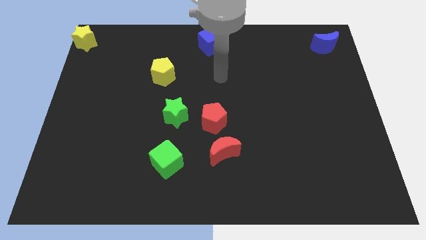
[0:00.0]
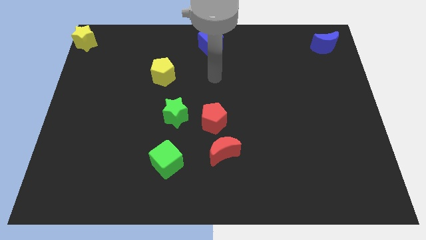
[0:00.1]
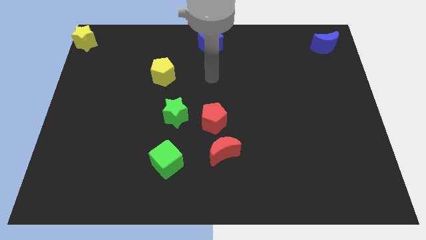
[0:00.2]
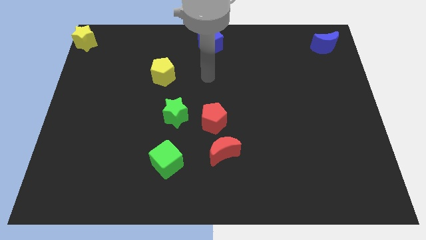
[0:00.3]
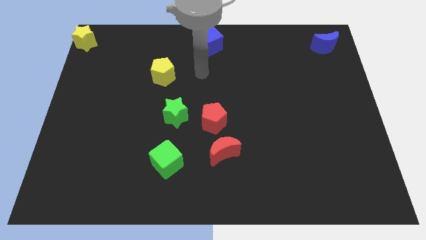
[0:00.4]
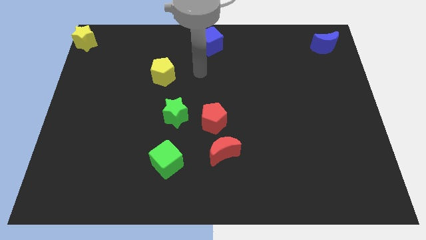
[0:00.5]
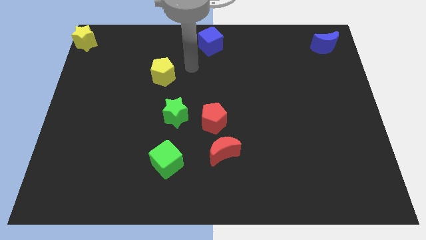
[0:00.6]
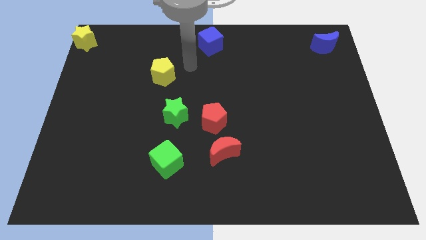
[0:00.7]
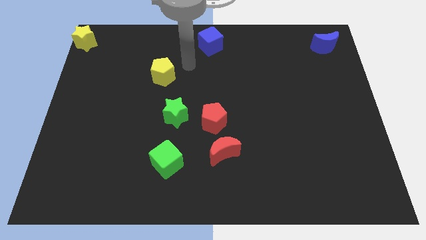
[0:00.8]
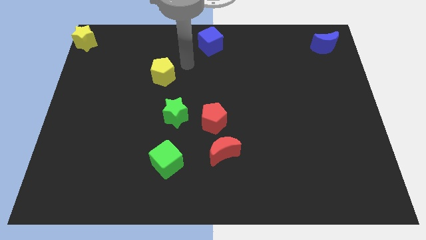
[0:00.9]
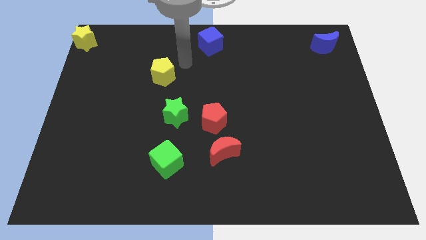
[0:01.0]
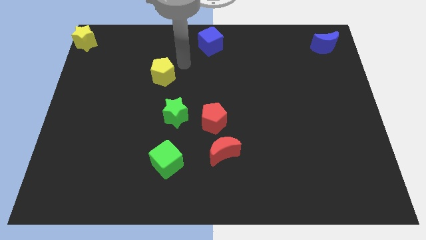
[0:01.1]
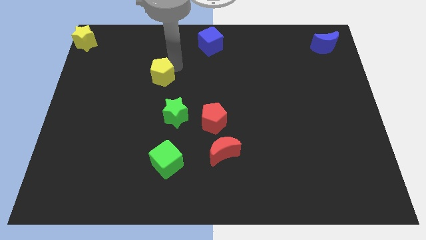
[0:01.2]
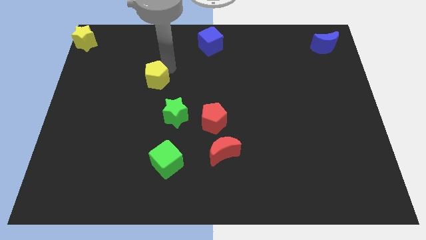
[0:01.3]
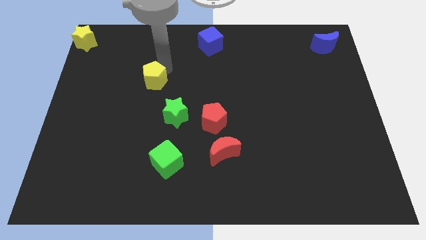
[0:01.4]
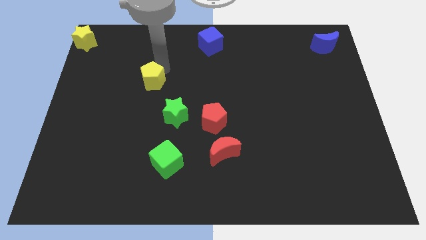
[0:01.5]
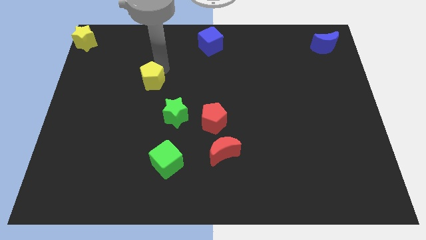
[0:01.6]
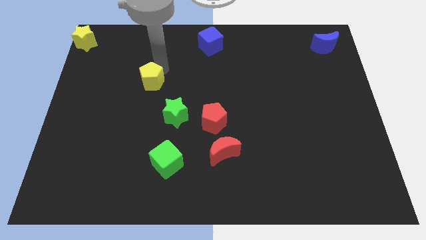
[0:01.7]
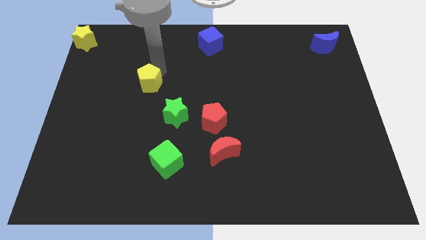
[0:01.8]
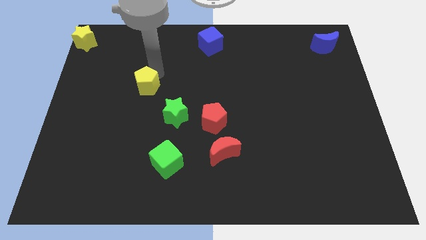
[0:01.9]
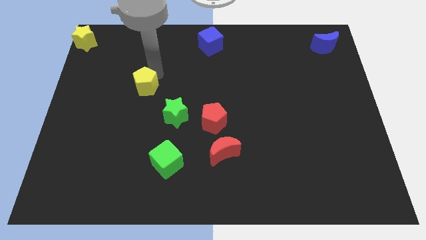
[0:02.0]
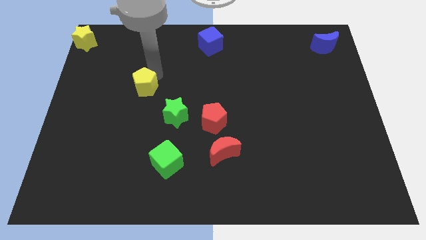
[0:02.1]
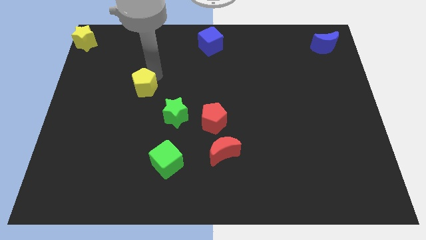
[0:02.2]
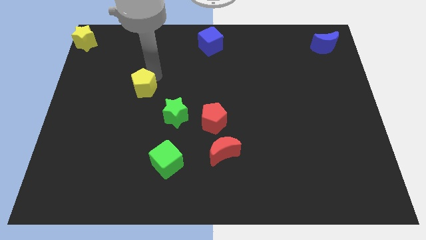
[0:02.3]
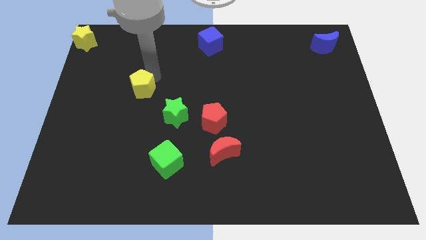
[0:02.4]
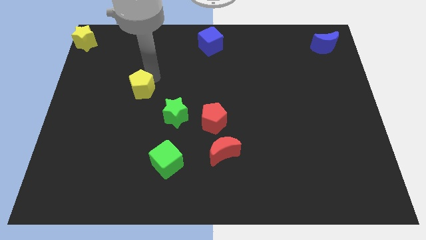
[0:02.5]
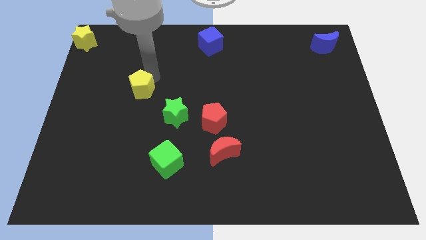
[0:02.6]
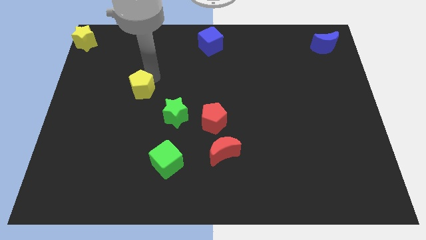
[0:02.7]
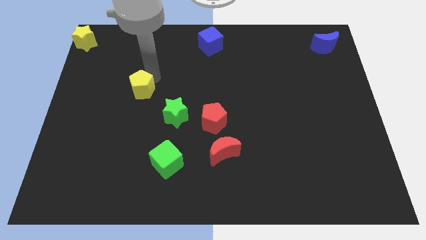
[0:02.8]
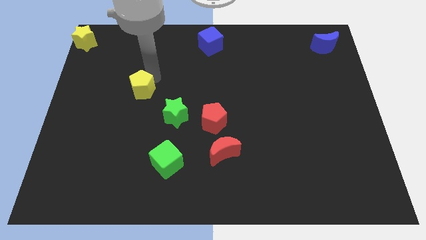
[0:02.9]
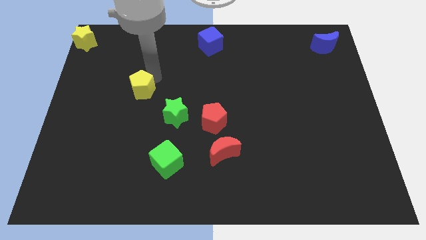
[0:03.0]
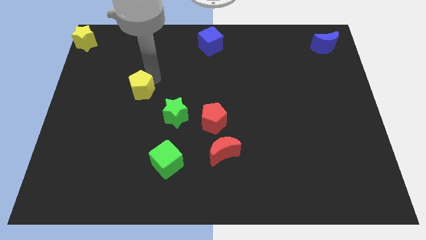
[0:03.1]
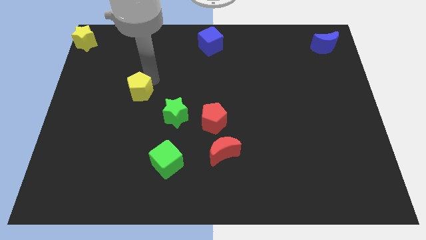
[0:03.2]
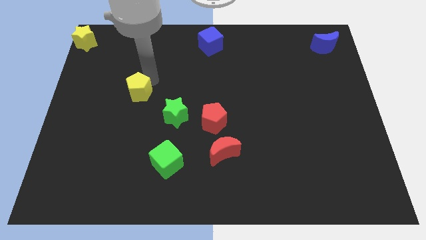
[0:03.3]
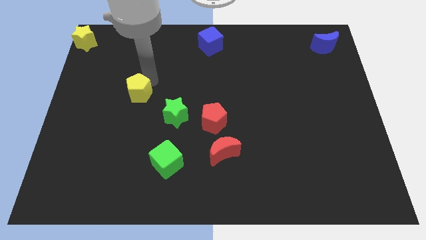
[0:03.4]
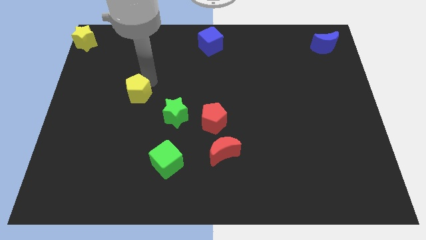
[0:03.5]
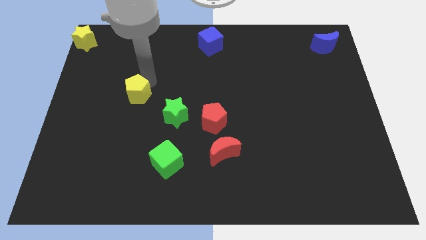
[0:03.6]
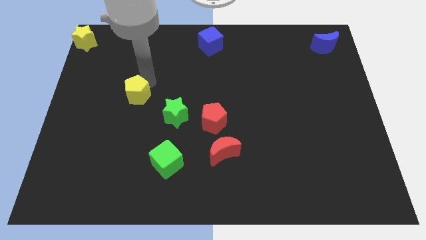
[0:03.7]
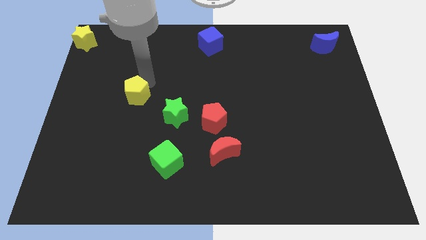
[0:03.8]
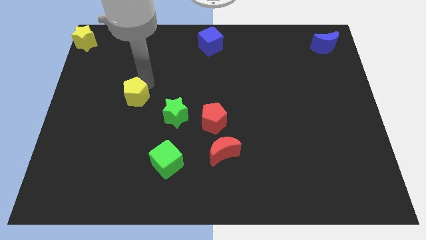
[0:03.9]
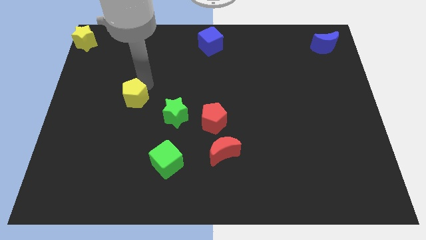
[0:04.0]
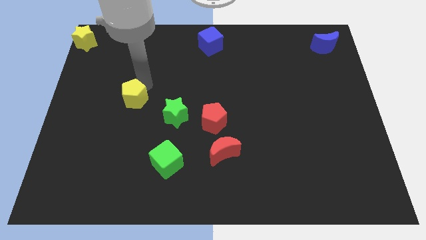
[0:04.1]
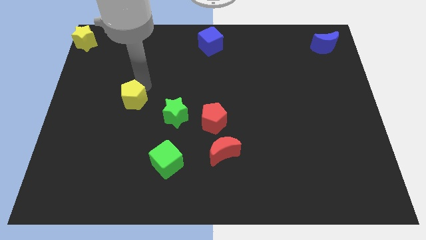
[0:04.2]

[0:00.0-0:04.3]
place the yellow pentagon to the top left of the green star

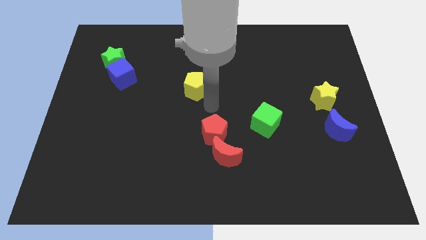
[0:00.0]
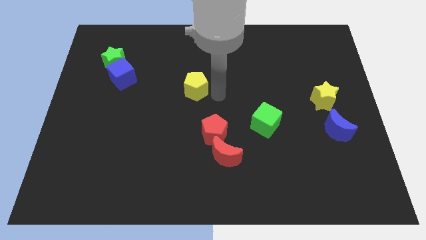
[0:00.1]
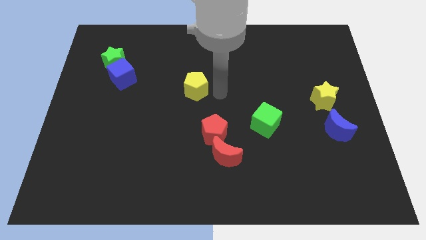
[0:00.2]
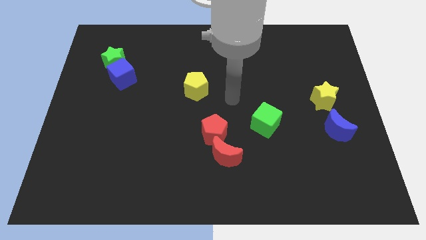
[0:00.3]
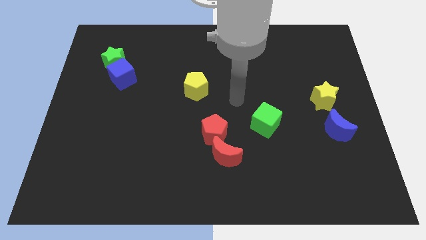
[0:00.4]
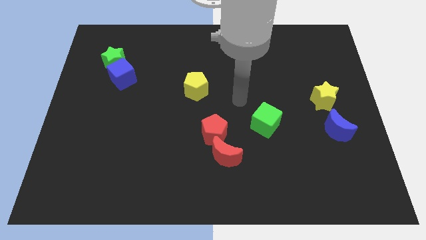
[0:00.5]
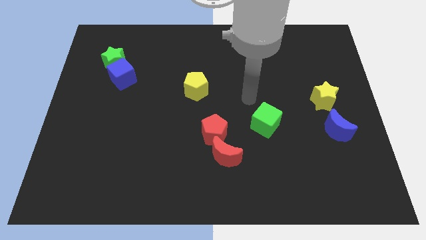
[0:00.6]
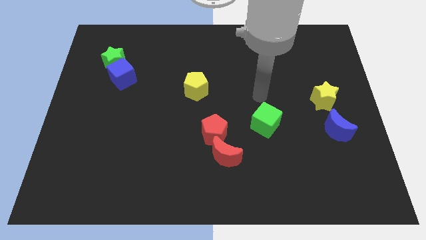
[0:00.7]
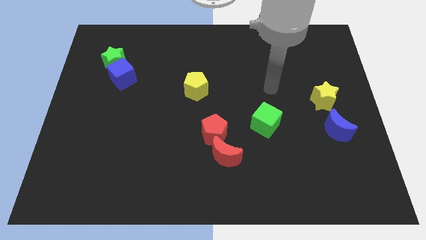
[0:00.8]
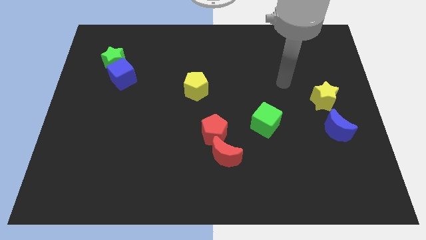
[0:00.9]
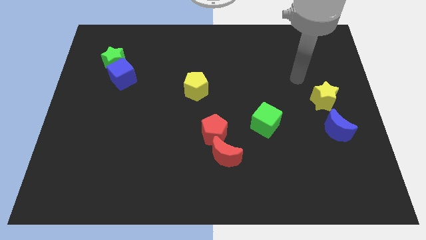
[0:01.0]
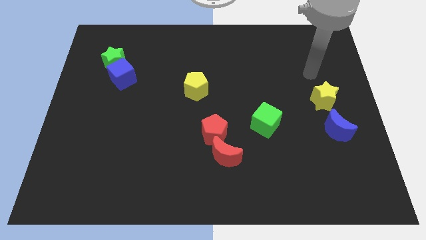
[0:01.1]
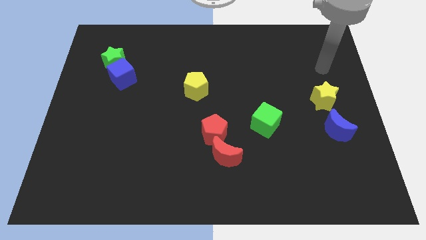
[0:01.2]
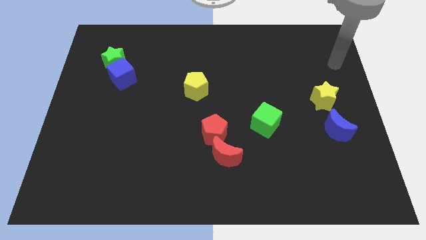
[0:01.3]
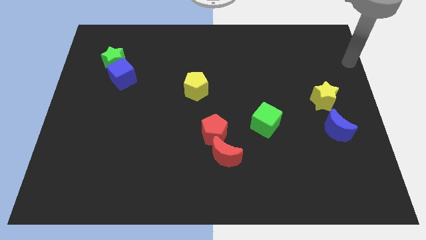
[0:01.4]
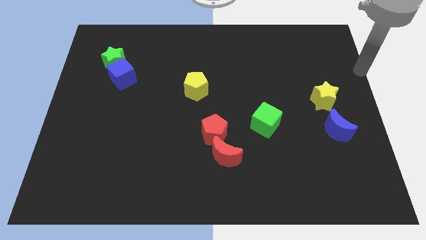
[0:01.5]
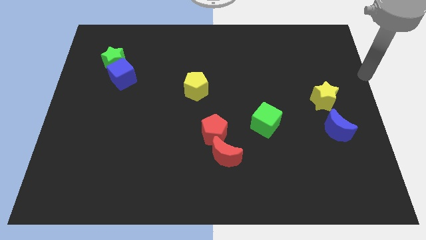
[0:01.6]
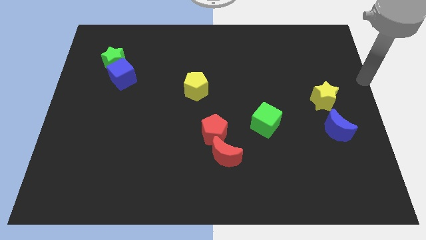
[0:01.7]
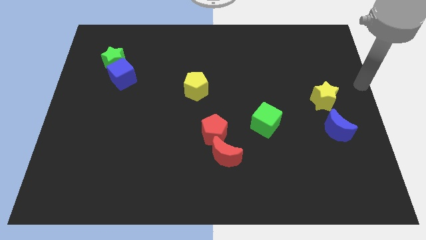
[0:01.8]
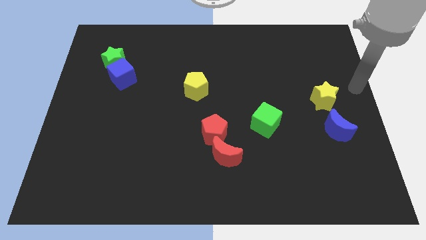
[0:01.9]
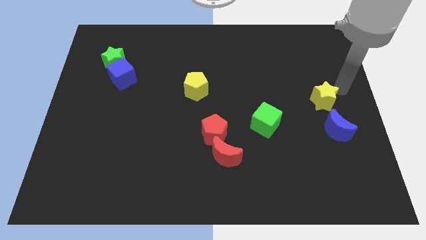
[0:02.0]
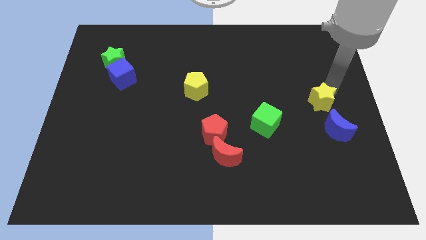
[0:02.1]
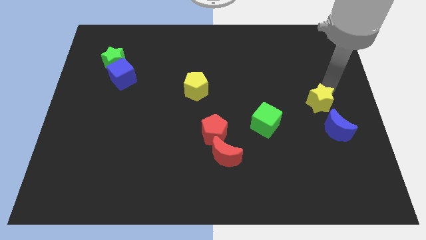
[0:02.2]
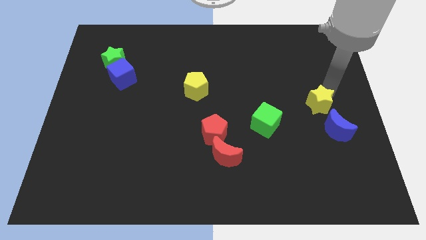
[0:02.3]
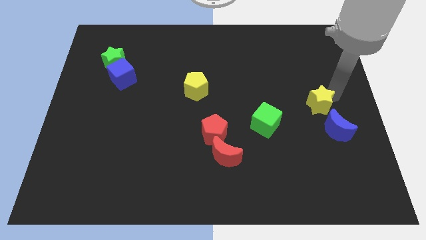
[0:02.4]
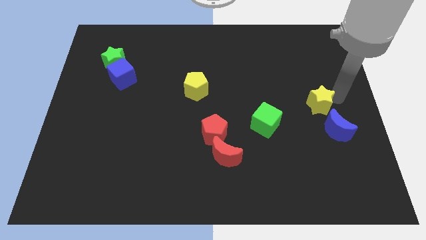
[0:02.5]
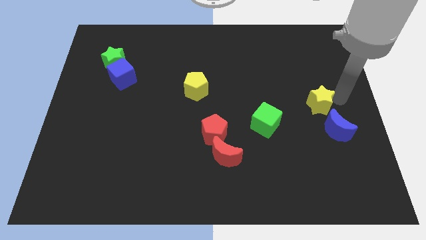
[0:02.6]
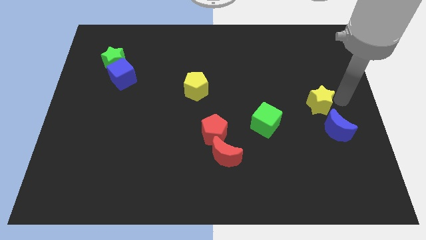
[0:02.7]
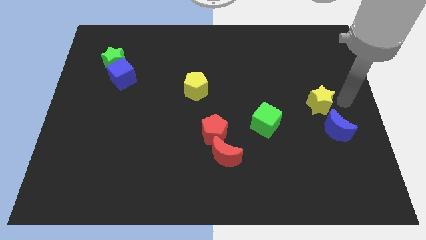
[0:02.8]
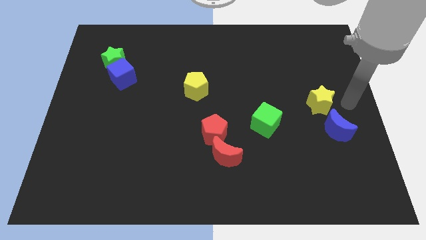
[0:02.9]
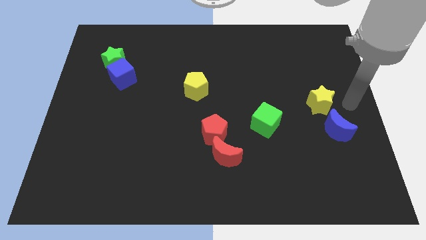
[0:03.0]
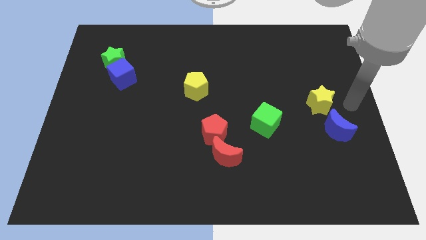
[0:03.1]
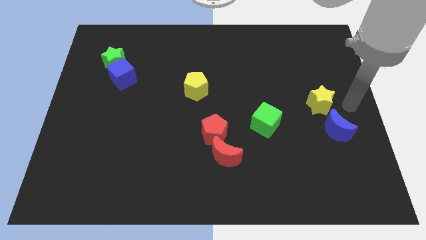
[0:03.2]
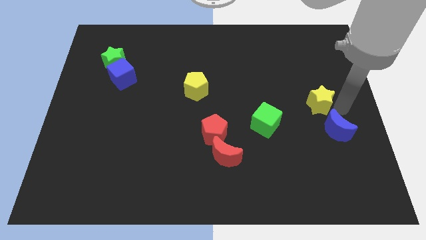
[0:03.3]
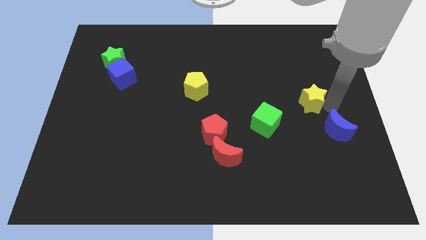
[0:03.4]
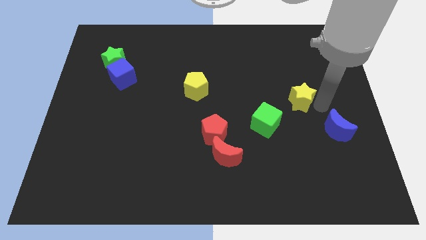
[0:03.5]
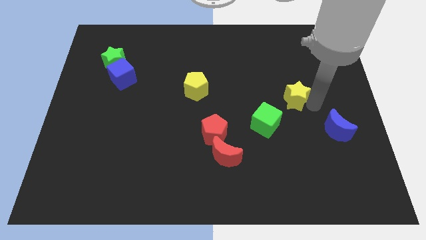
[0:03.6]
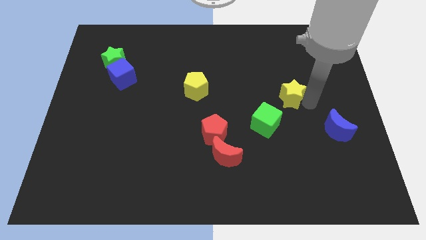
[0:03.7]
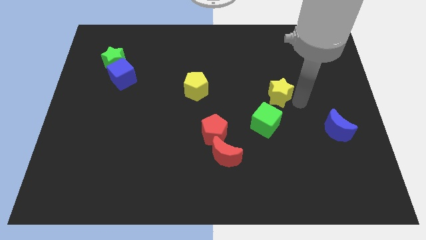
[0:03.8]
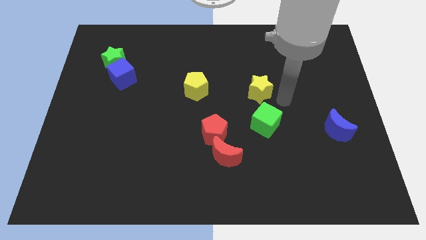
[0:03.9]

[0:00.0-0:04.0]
move the yellow star to the top right of the green cube

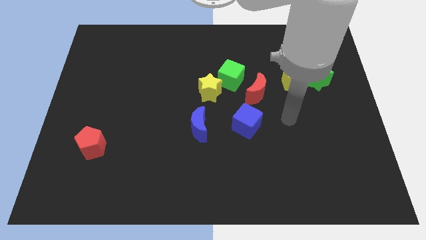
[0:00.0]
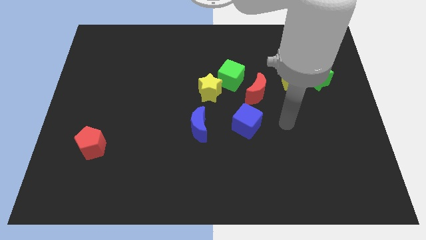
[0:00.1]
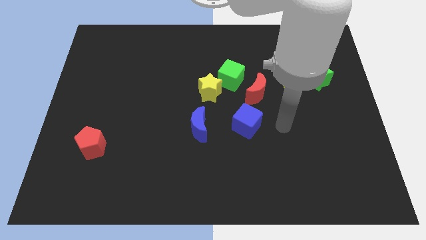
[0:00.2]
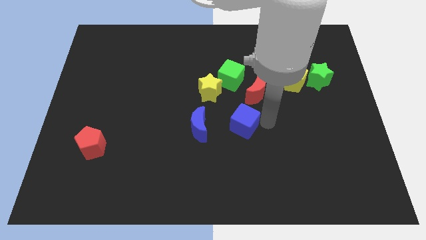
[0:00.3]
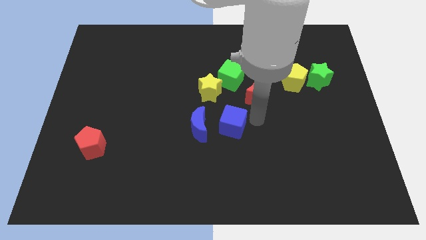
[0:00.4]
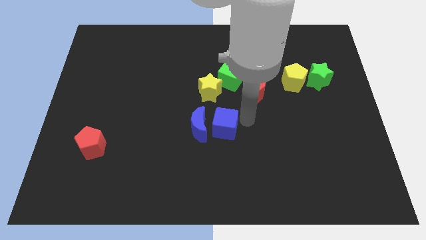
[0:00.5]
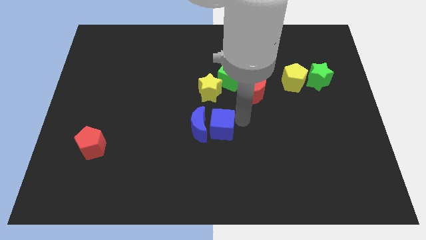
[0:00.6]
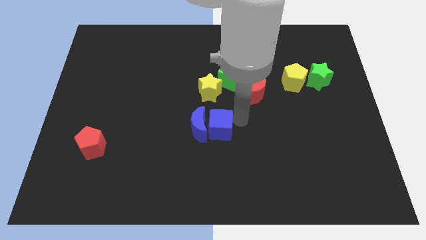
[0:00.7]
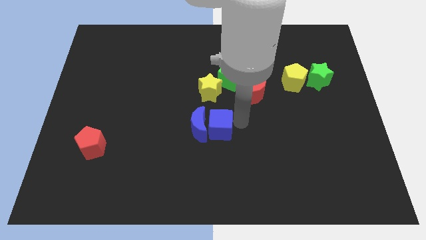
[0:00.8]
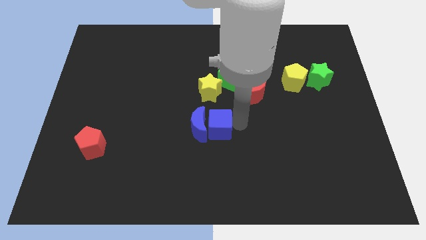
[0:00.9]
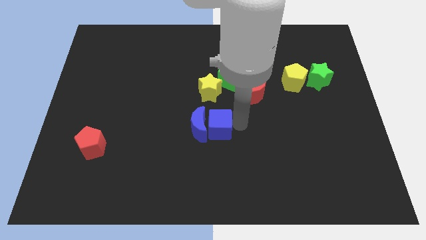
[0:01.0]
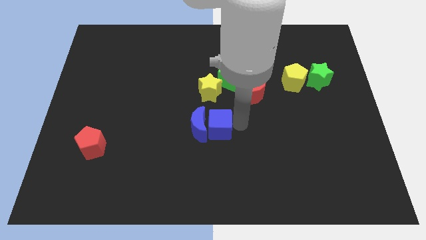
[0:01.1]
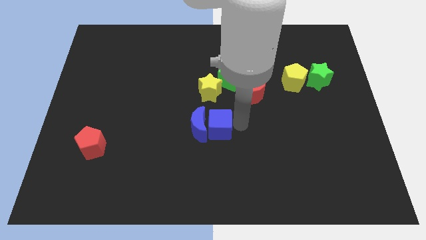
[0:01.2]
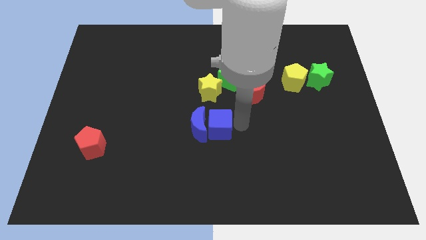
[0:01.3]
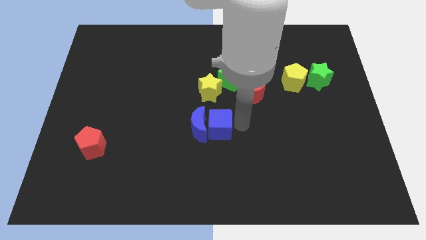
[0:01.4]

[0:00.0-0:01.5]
drag the blue cube to the center
